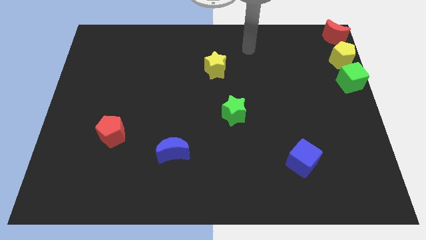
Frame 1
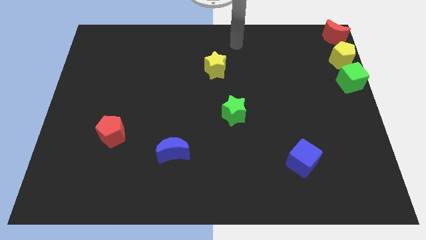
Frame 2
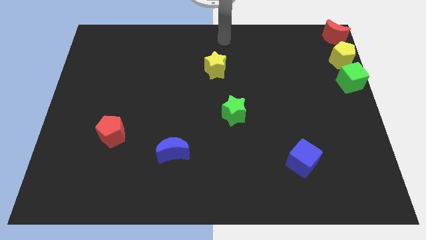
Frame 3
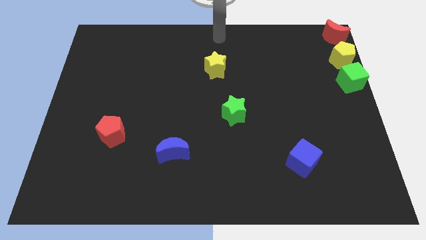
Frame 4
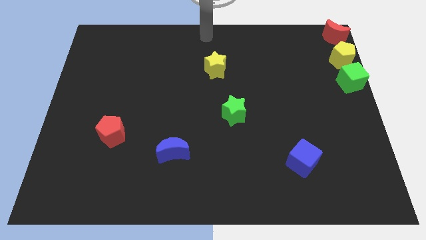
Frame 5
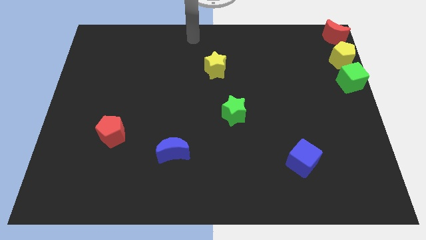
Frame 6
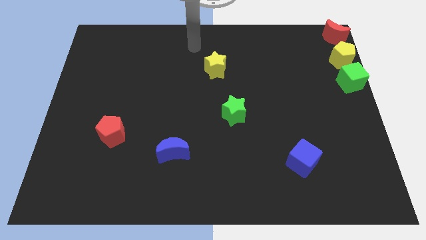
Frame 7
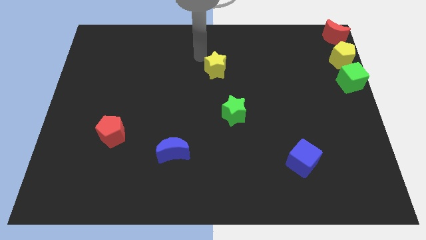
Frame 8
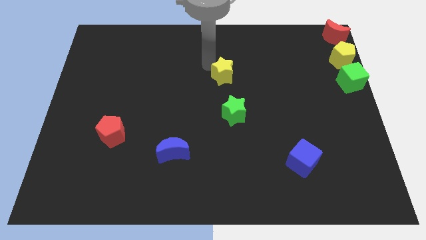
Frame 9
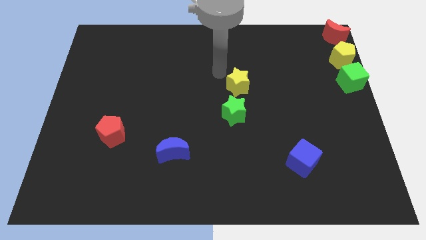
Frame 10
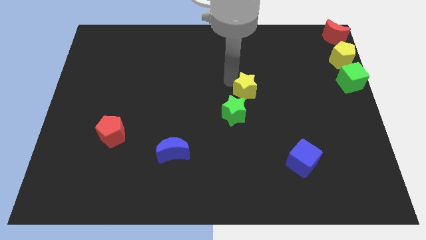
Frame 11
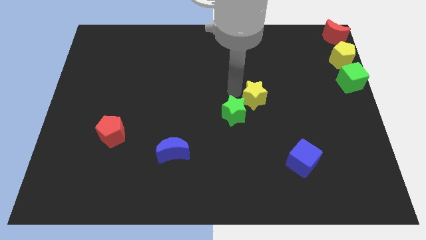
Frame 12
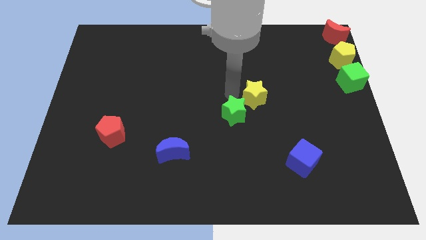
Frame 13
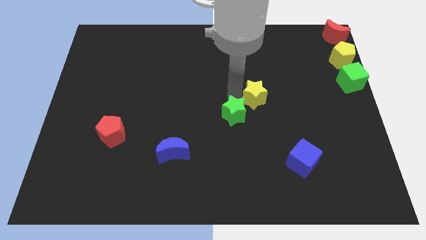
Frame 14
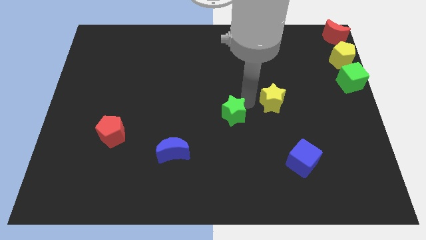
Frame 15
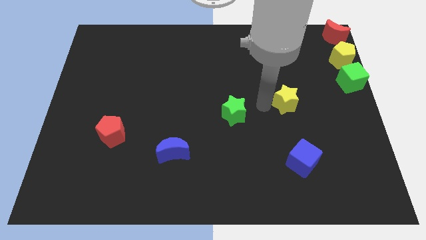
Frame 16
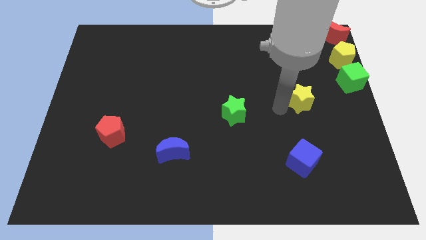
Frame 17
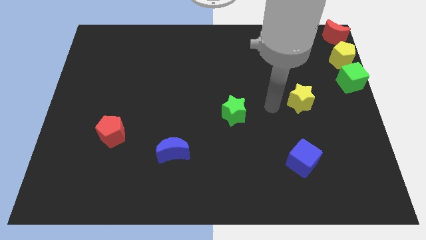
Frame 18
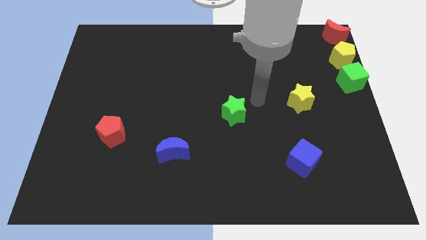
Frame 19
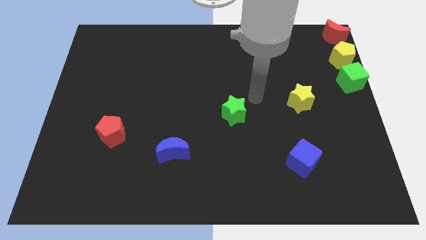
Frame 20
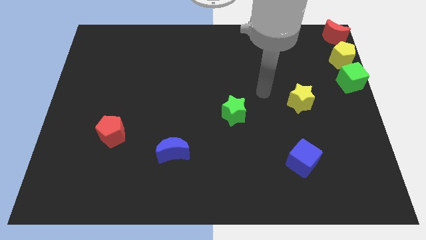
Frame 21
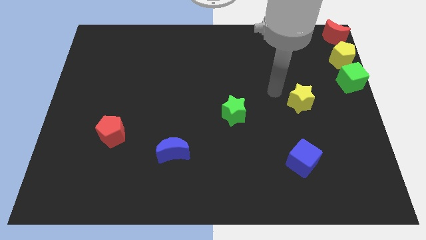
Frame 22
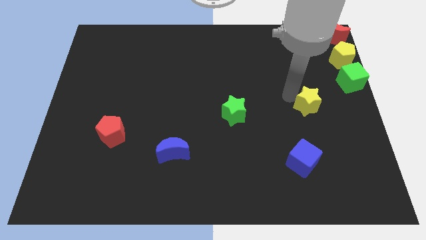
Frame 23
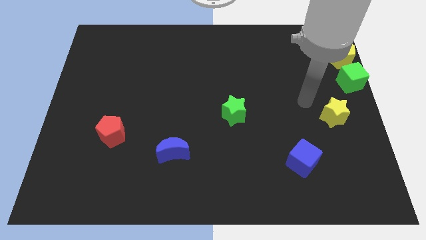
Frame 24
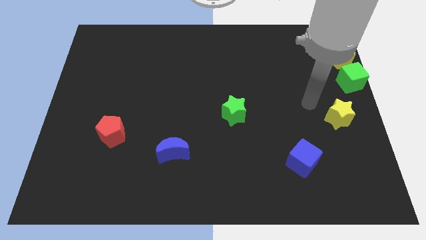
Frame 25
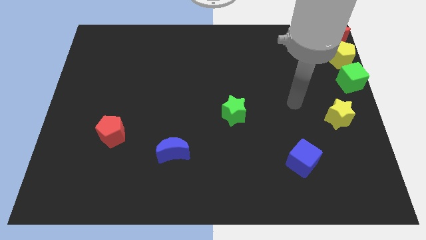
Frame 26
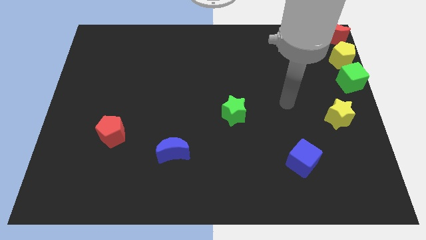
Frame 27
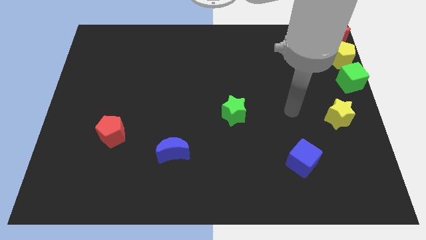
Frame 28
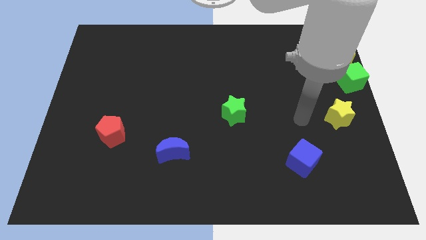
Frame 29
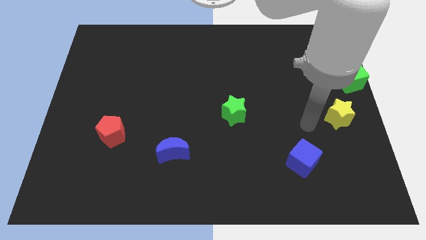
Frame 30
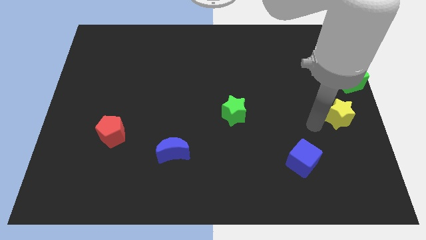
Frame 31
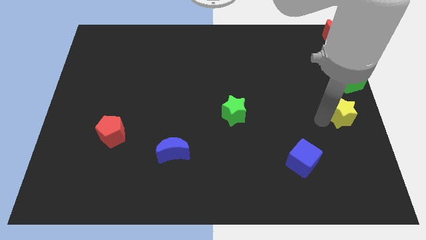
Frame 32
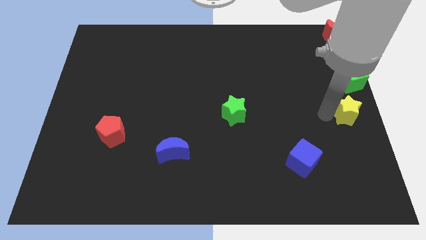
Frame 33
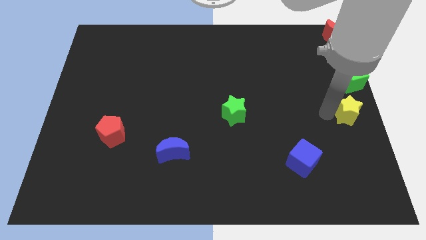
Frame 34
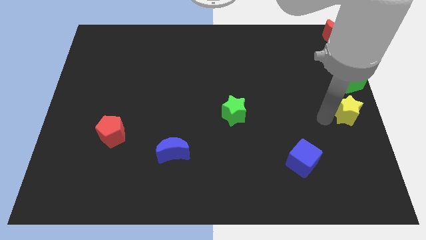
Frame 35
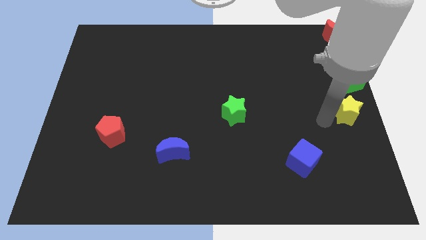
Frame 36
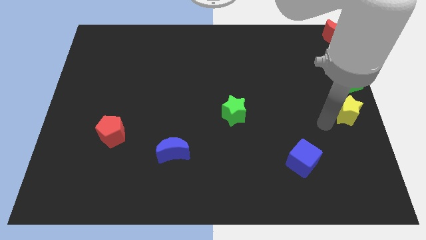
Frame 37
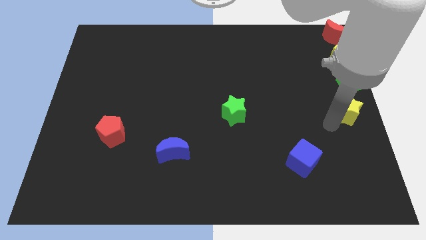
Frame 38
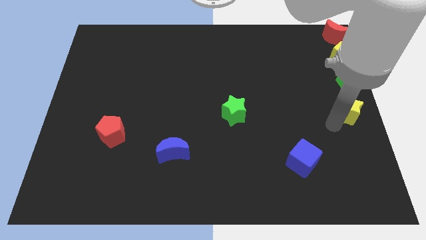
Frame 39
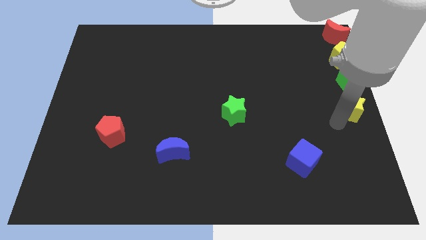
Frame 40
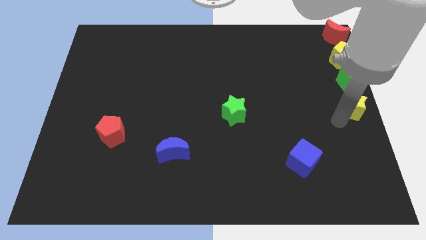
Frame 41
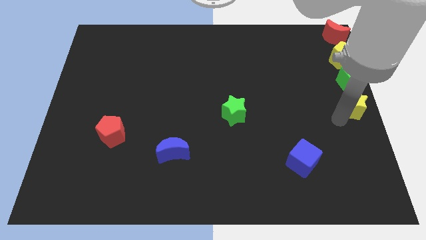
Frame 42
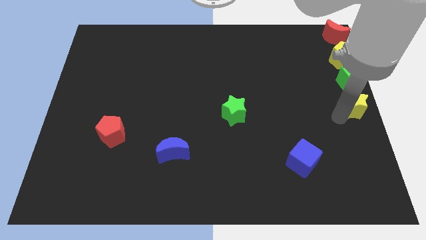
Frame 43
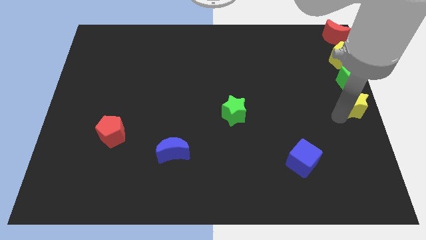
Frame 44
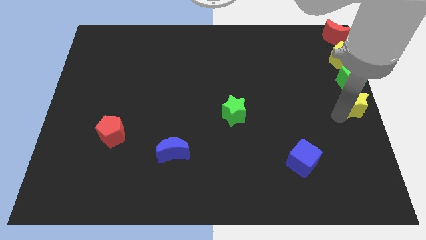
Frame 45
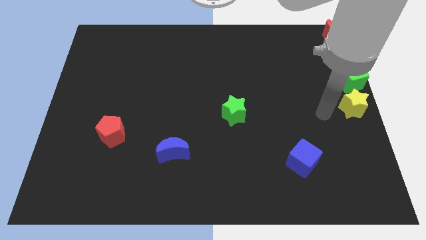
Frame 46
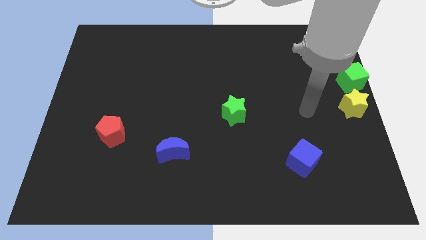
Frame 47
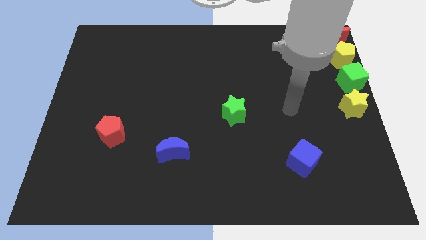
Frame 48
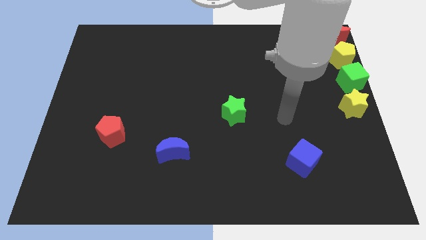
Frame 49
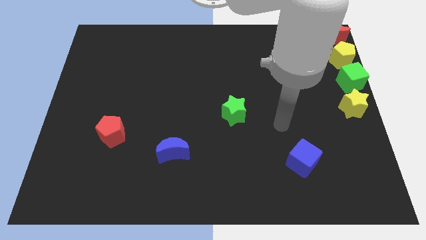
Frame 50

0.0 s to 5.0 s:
place the yellow star horizontally to the right side of the green star

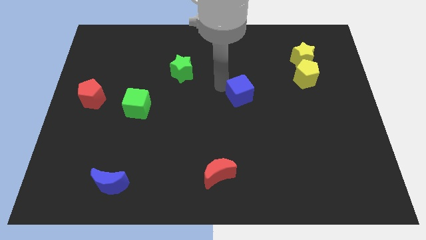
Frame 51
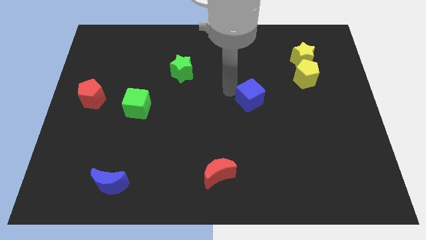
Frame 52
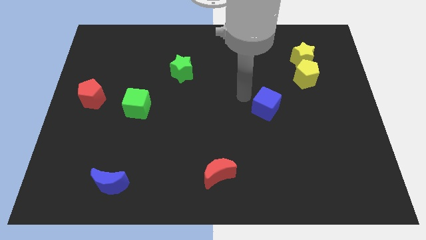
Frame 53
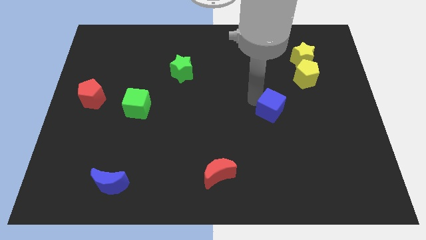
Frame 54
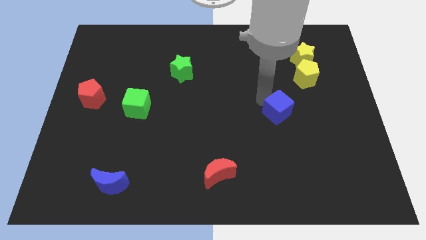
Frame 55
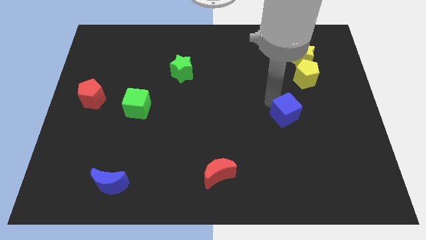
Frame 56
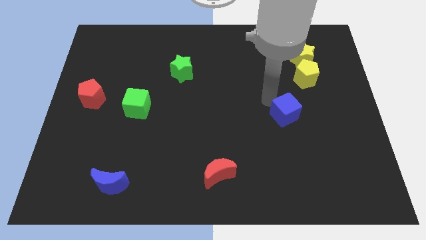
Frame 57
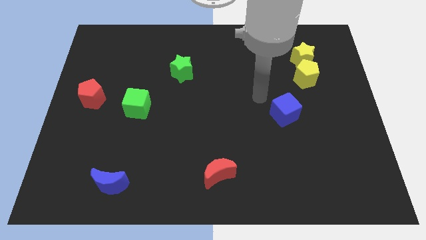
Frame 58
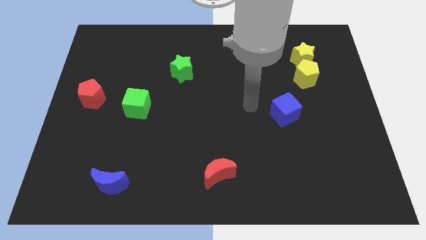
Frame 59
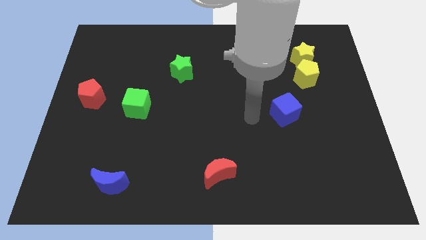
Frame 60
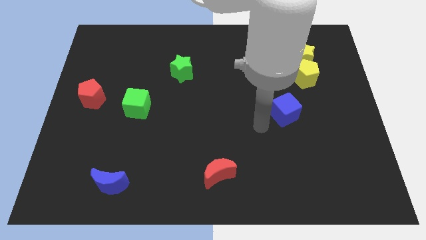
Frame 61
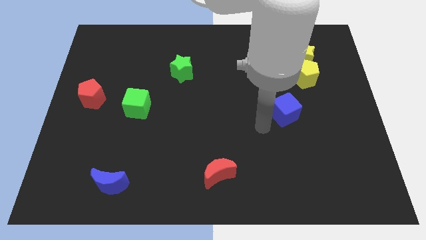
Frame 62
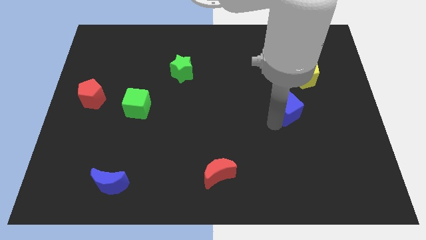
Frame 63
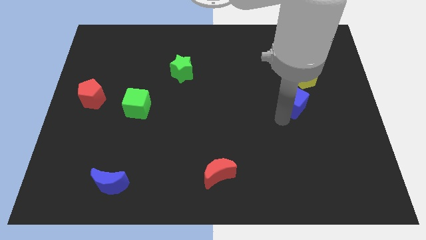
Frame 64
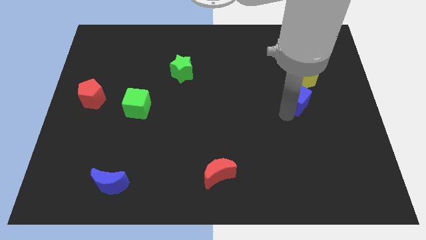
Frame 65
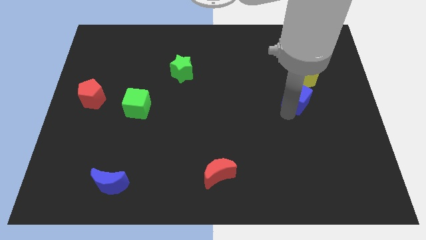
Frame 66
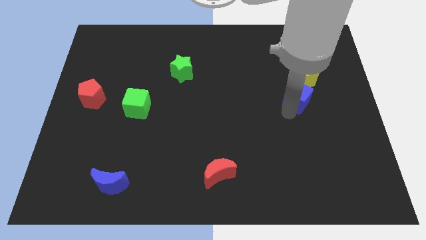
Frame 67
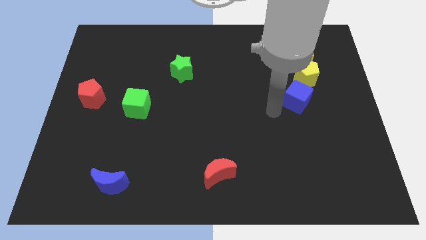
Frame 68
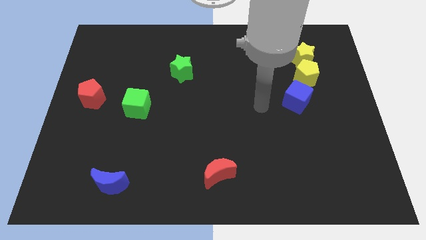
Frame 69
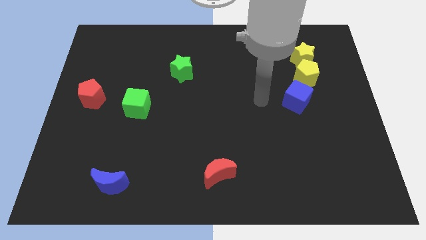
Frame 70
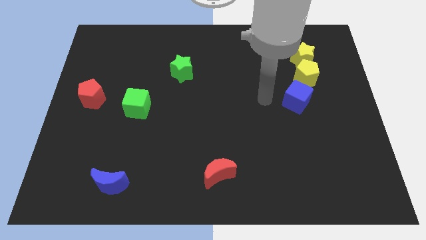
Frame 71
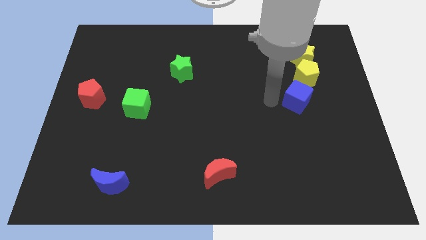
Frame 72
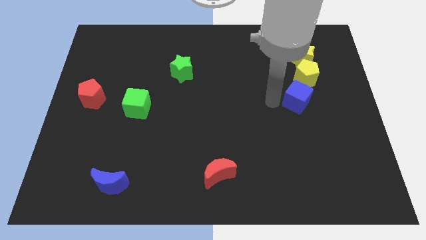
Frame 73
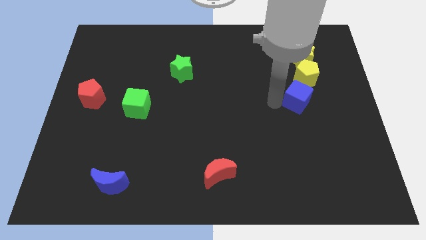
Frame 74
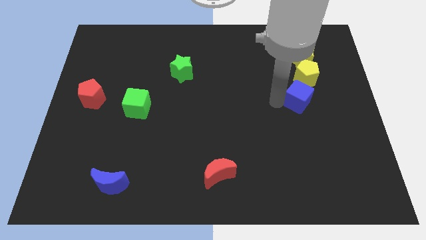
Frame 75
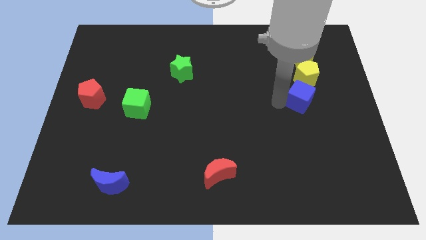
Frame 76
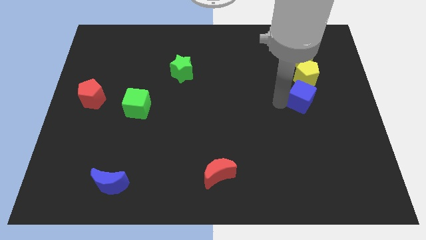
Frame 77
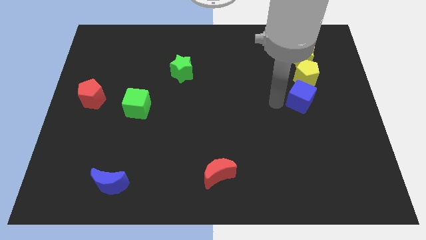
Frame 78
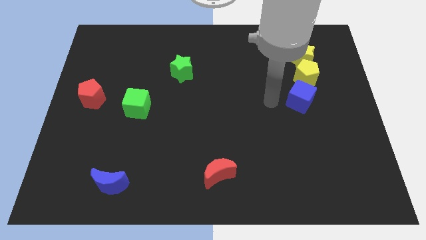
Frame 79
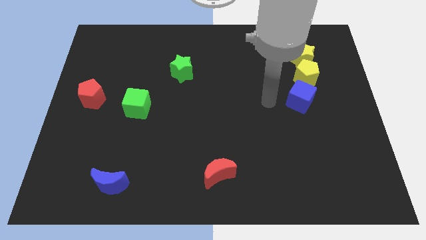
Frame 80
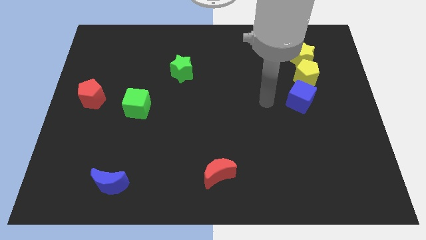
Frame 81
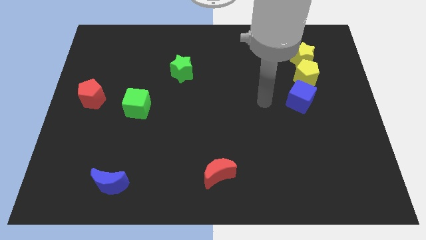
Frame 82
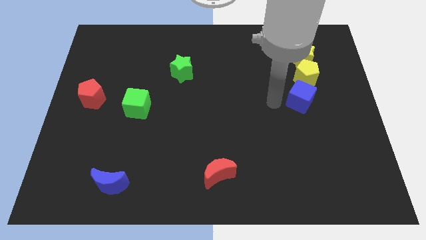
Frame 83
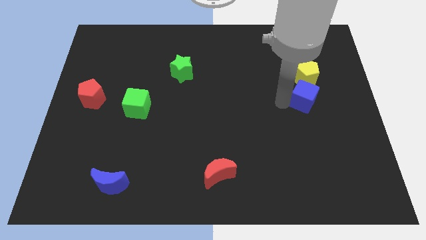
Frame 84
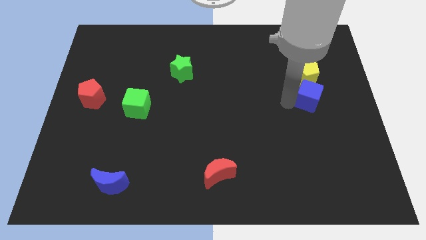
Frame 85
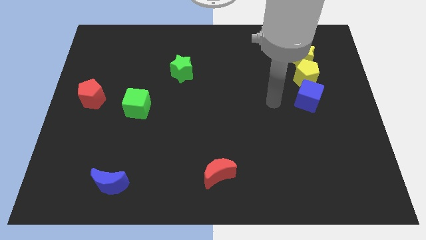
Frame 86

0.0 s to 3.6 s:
drag the blue cube and place it below the yellow pentagon

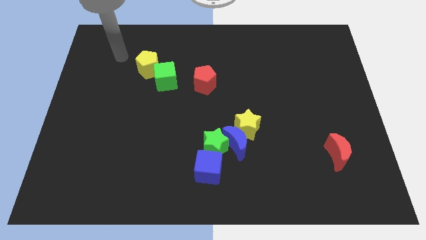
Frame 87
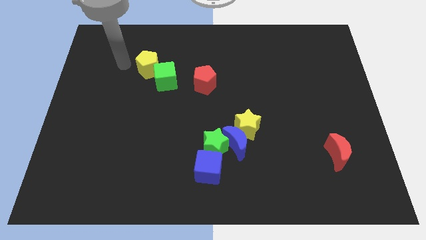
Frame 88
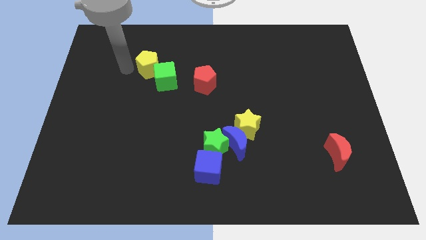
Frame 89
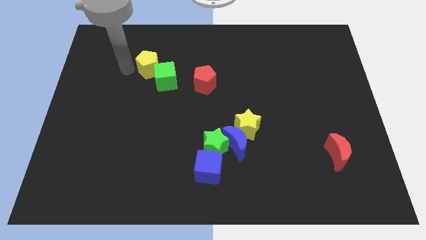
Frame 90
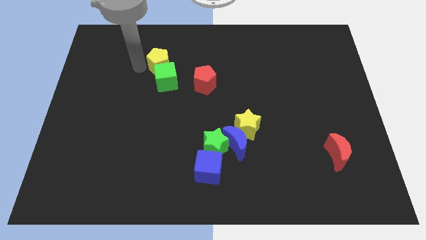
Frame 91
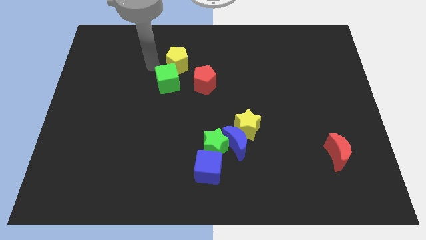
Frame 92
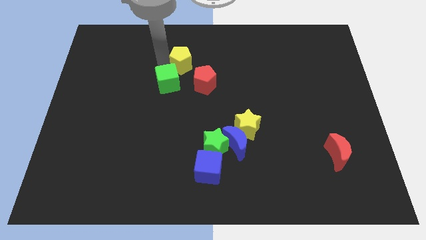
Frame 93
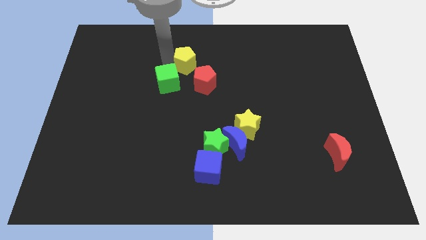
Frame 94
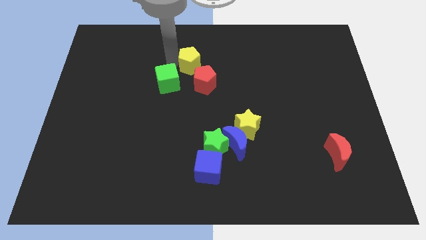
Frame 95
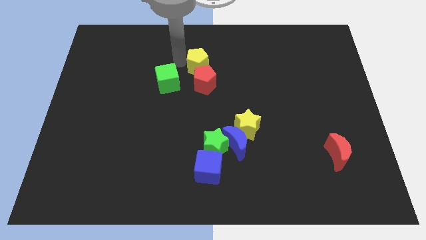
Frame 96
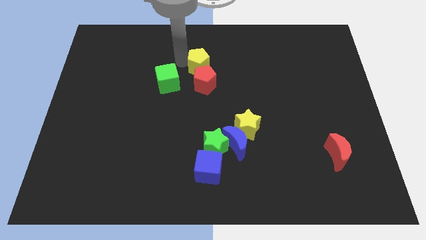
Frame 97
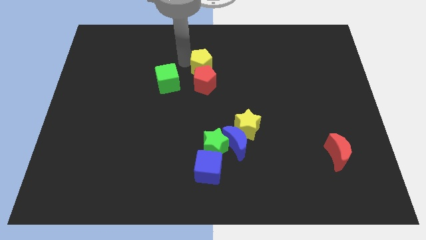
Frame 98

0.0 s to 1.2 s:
place yellow pentagon to the top of red pentagon
